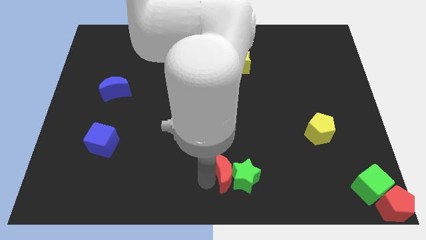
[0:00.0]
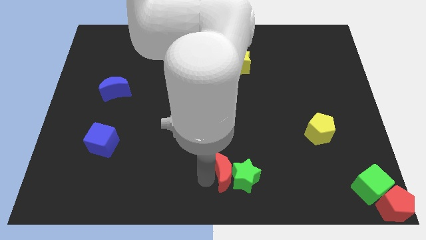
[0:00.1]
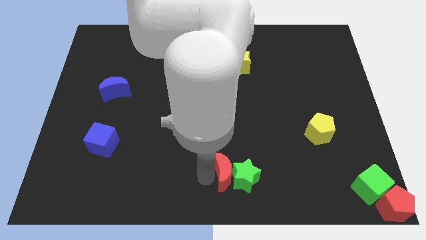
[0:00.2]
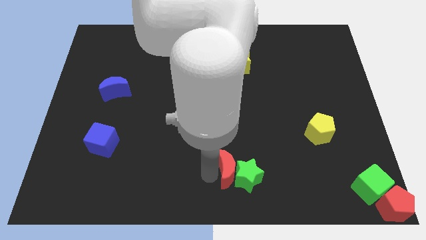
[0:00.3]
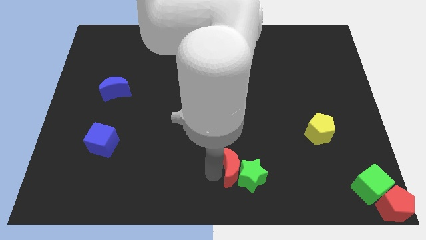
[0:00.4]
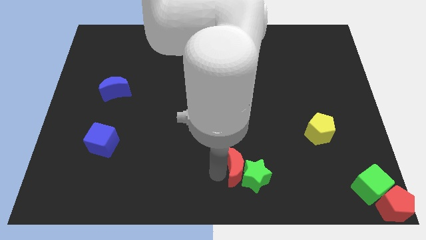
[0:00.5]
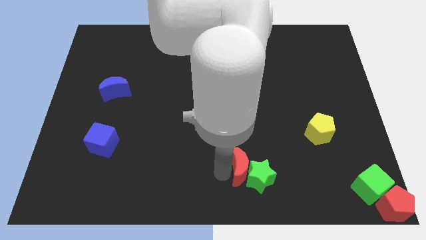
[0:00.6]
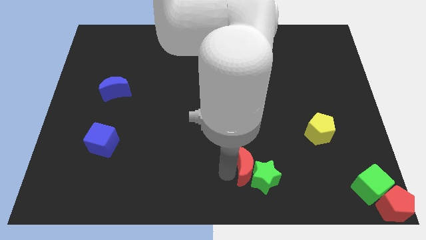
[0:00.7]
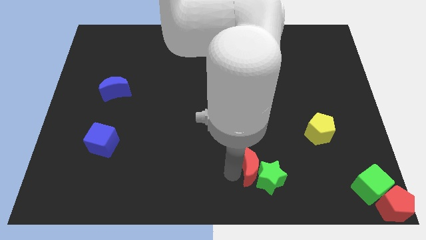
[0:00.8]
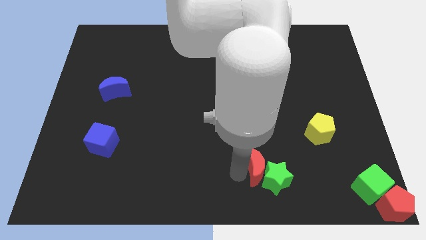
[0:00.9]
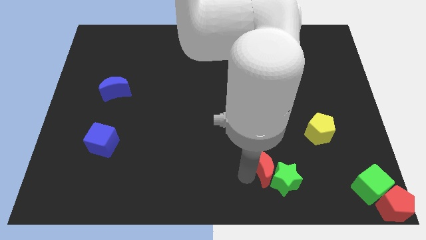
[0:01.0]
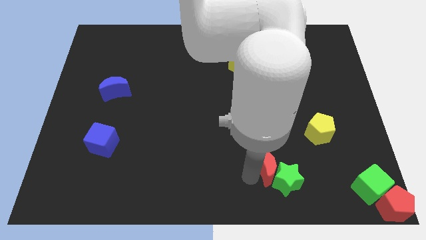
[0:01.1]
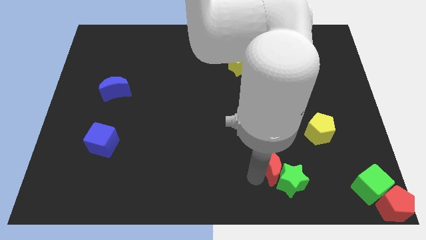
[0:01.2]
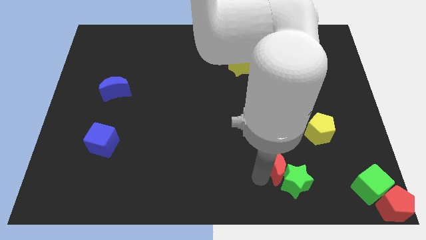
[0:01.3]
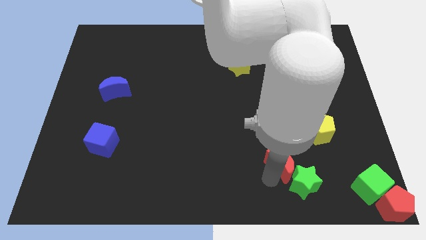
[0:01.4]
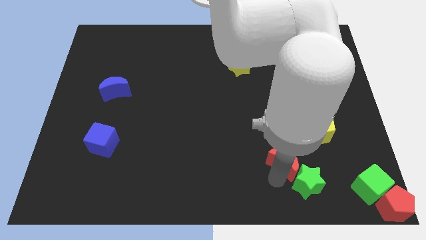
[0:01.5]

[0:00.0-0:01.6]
push the red crescent to the left of the green cube along with the green star

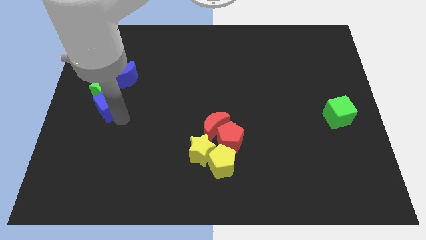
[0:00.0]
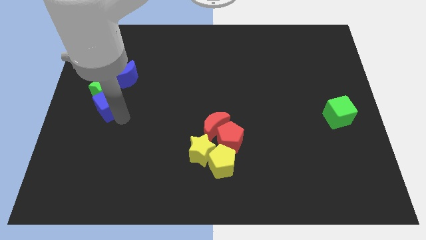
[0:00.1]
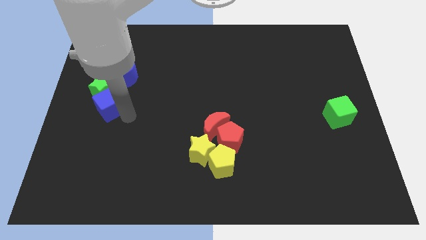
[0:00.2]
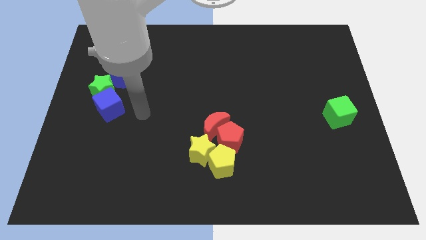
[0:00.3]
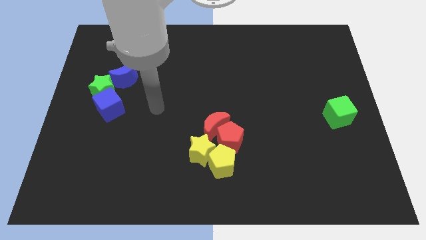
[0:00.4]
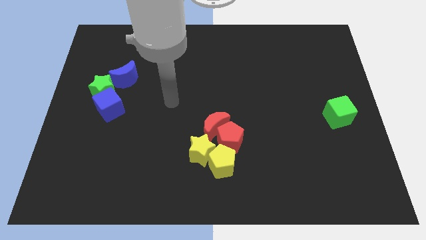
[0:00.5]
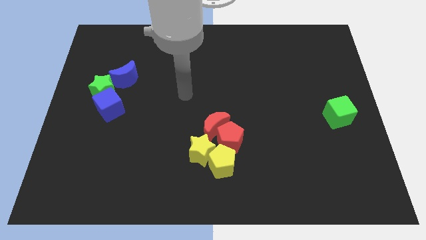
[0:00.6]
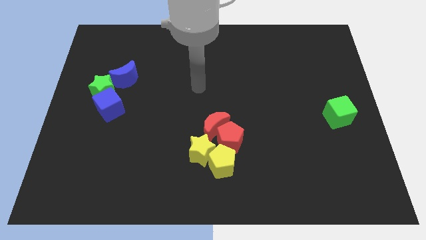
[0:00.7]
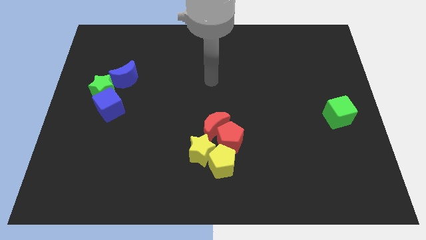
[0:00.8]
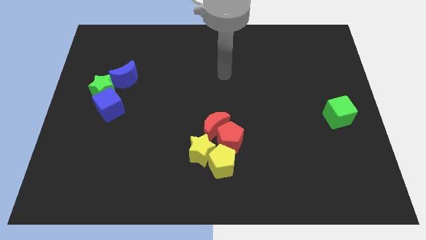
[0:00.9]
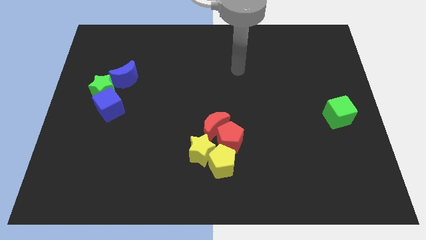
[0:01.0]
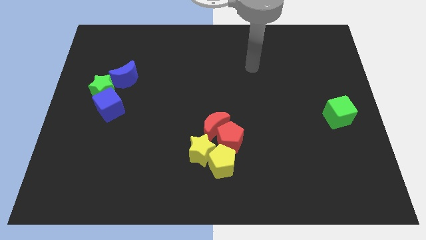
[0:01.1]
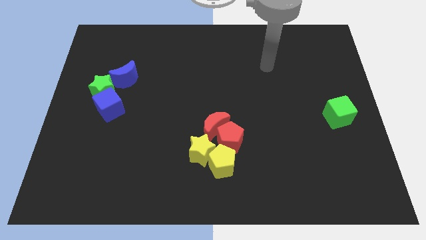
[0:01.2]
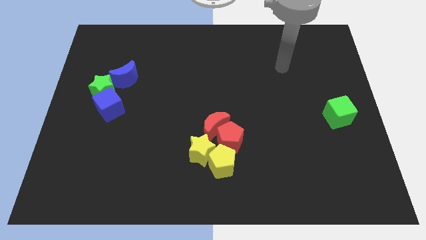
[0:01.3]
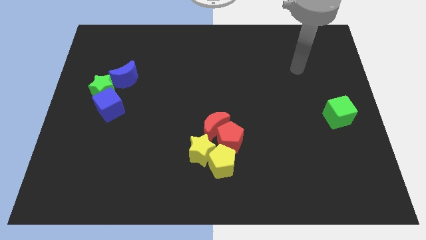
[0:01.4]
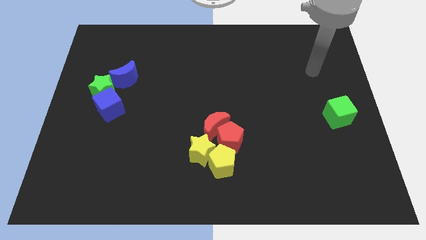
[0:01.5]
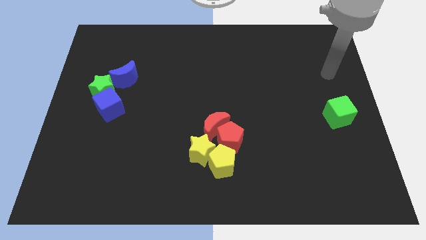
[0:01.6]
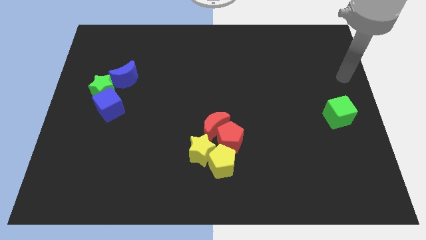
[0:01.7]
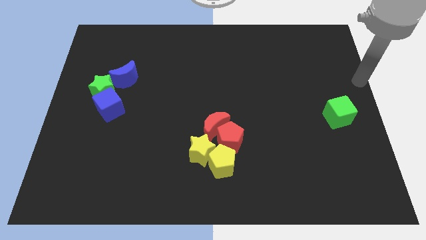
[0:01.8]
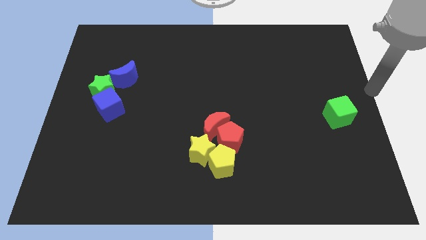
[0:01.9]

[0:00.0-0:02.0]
move your arm towards the right center of the board

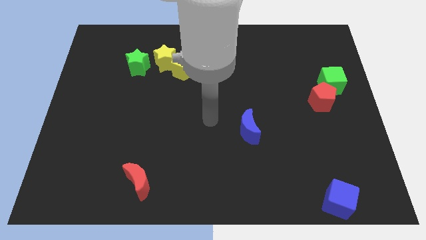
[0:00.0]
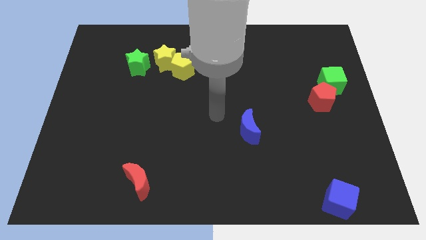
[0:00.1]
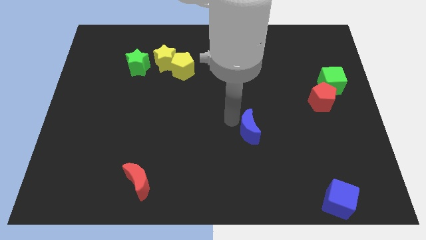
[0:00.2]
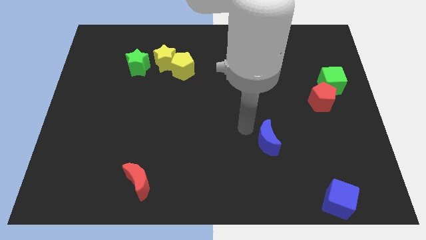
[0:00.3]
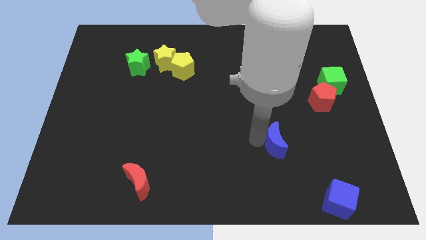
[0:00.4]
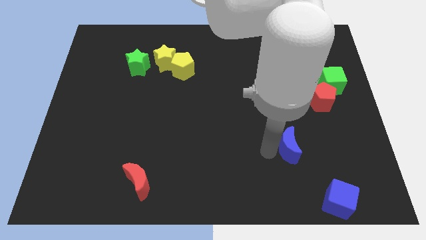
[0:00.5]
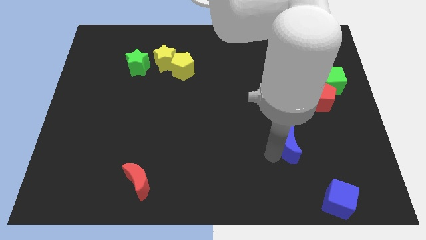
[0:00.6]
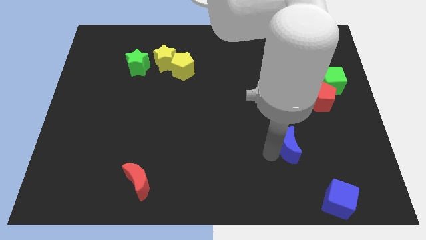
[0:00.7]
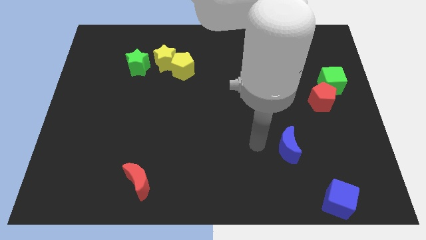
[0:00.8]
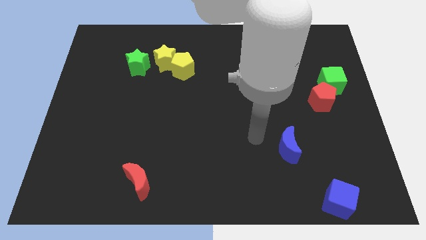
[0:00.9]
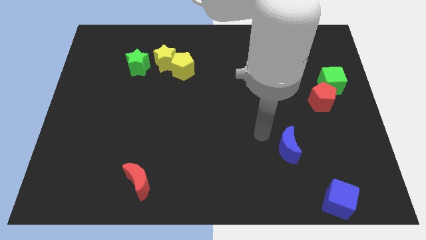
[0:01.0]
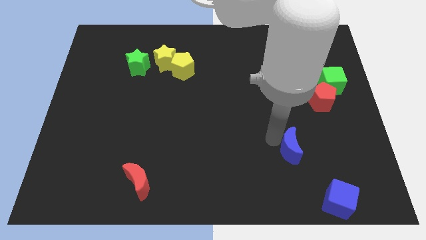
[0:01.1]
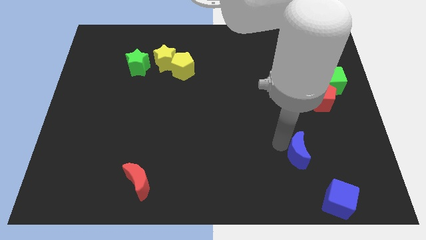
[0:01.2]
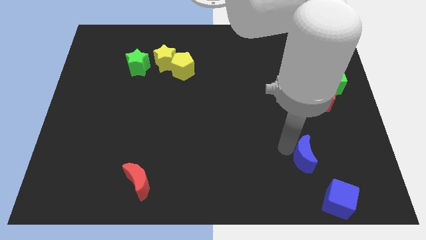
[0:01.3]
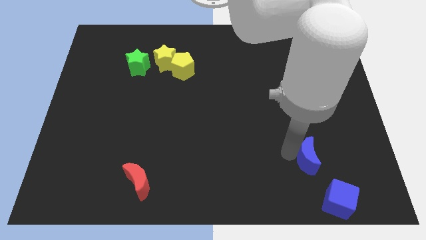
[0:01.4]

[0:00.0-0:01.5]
place the blue moon to the top left of the blue cube

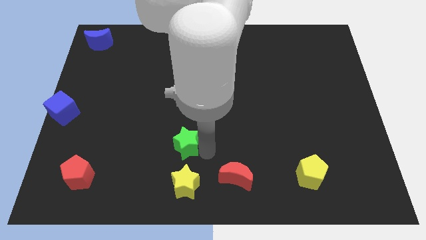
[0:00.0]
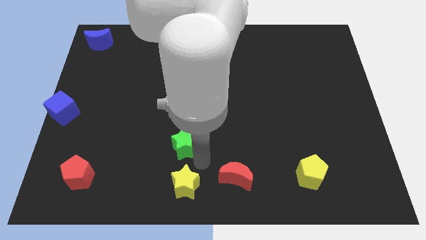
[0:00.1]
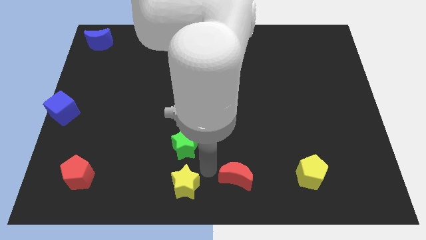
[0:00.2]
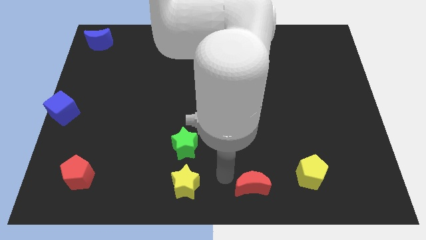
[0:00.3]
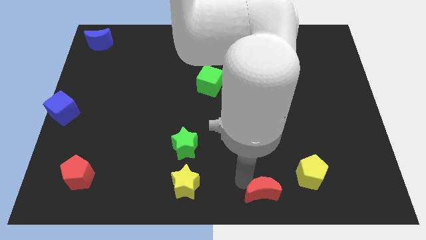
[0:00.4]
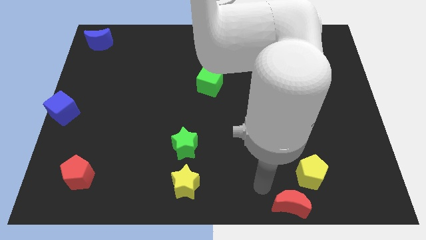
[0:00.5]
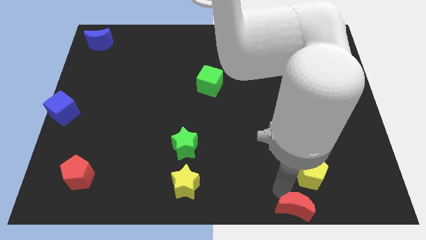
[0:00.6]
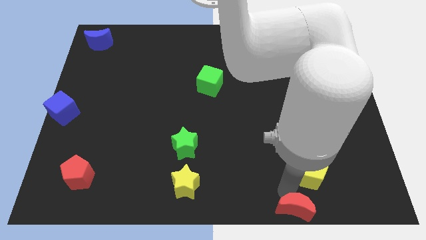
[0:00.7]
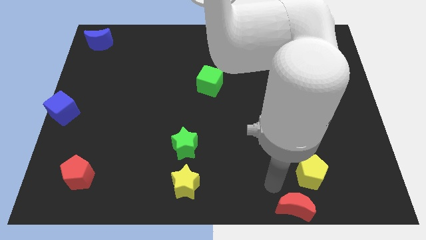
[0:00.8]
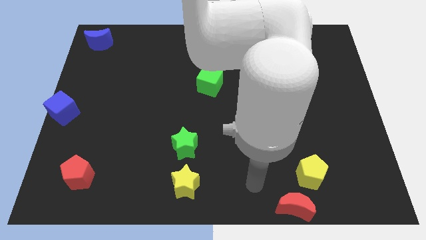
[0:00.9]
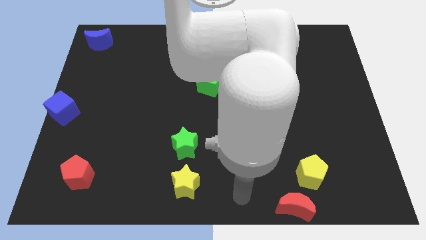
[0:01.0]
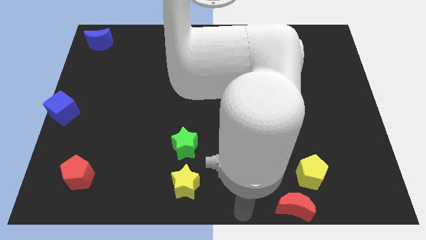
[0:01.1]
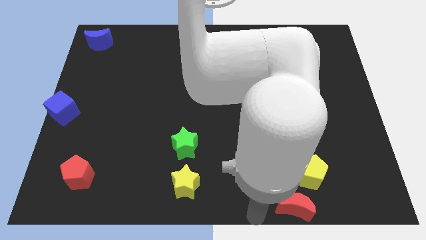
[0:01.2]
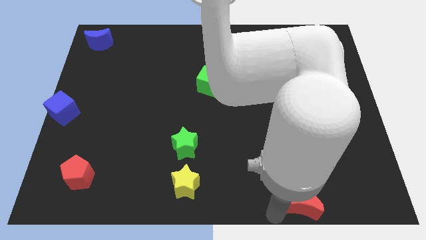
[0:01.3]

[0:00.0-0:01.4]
place red moon to the bottom of yellow pentagon

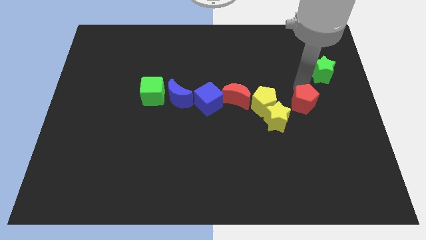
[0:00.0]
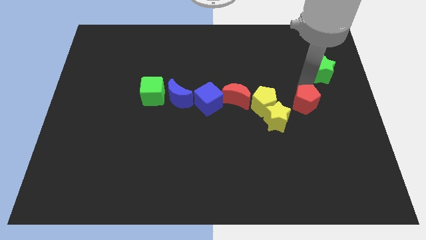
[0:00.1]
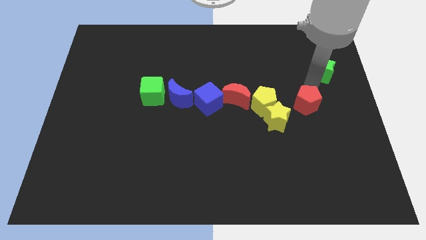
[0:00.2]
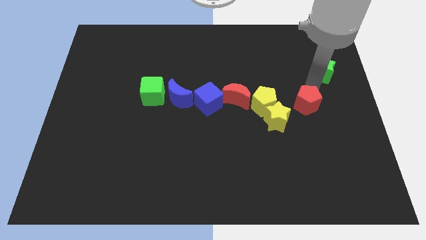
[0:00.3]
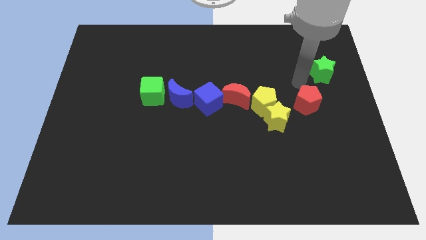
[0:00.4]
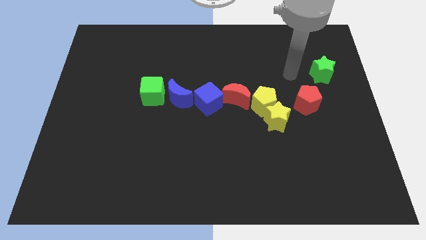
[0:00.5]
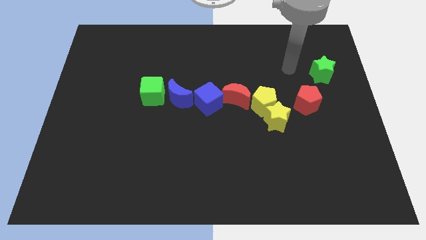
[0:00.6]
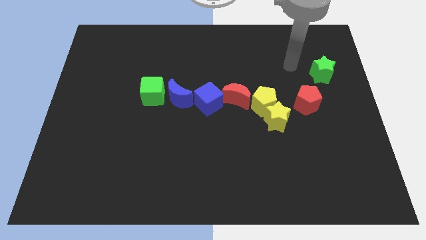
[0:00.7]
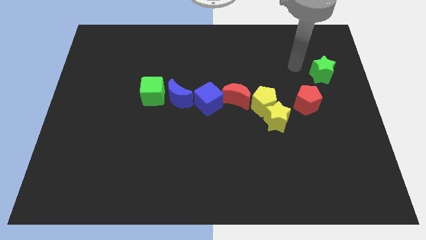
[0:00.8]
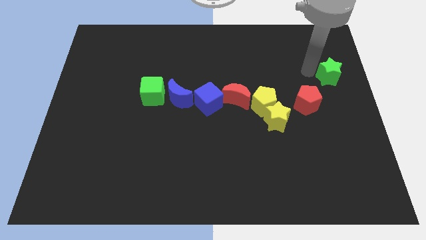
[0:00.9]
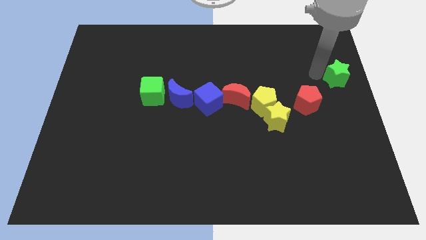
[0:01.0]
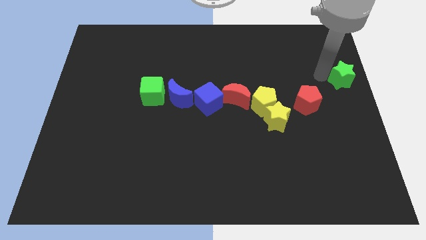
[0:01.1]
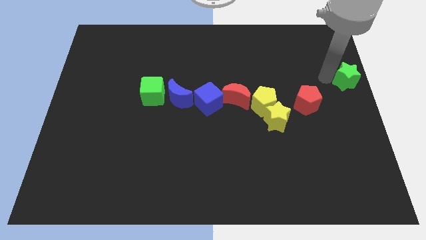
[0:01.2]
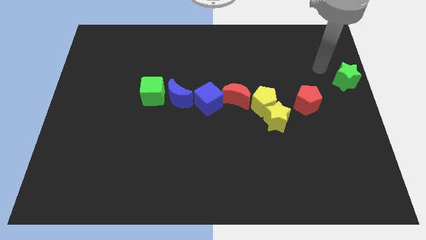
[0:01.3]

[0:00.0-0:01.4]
push the green star to the right side of the board

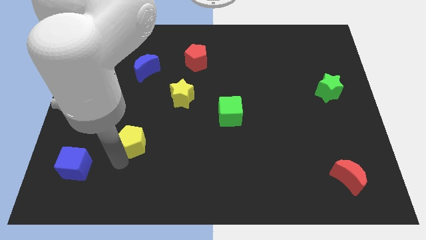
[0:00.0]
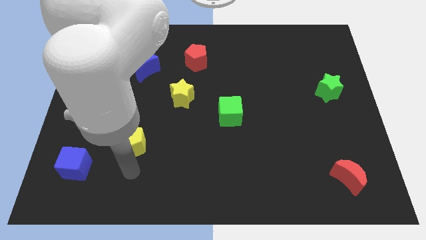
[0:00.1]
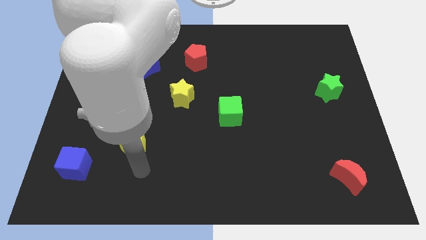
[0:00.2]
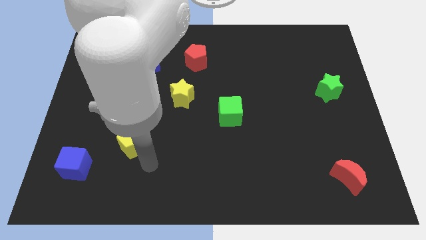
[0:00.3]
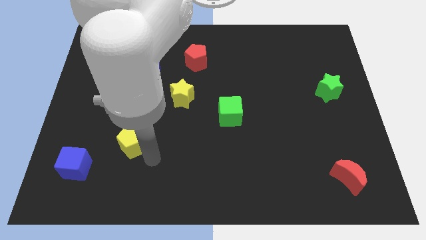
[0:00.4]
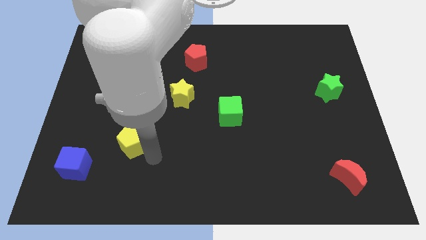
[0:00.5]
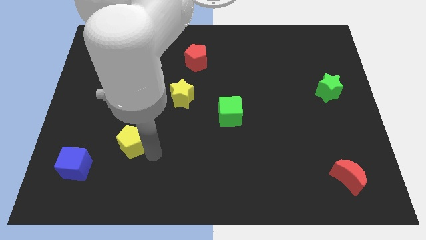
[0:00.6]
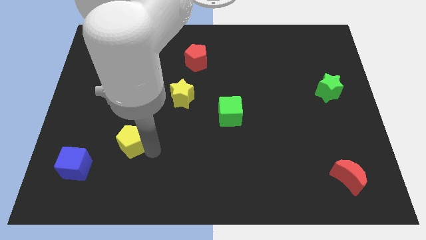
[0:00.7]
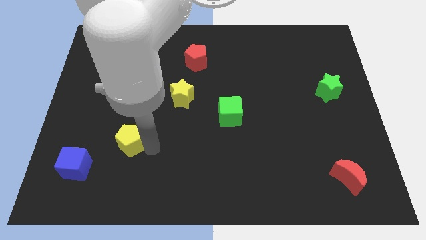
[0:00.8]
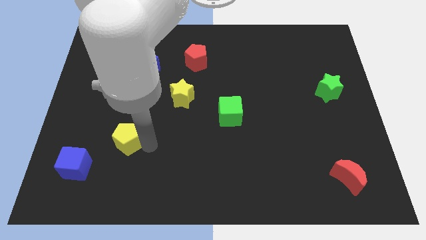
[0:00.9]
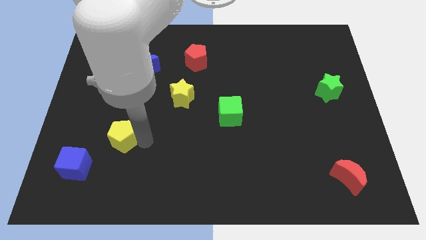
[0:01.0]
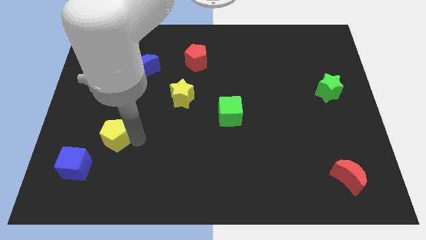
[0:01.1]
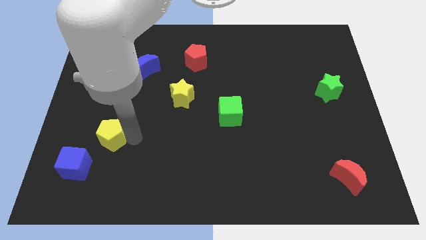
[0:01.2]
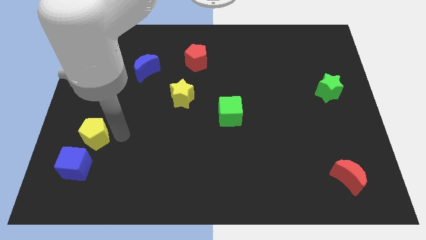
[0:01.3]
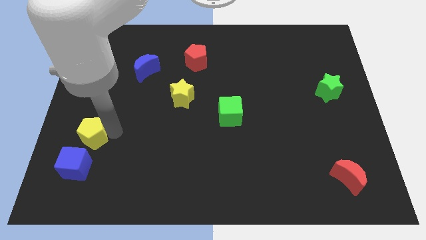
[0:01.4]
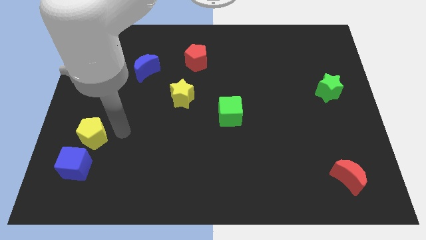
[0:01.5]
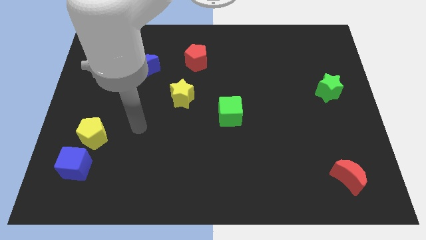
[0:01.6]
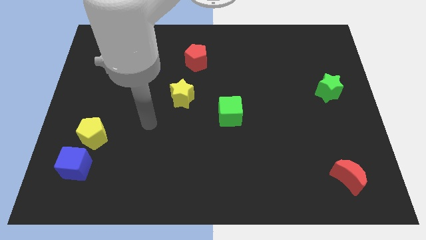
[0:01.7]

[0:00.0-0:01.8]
push the yellow pentagon on top of blue cube
